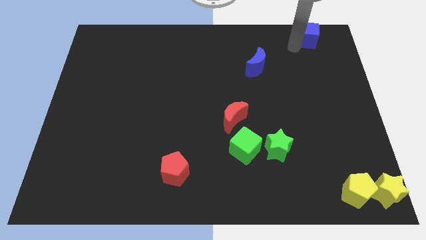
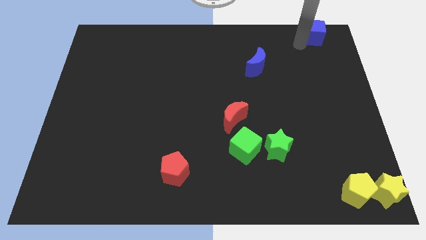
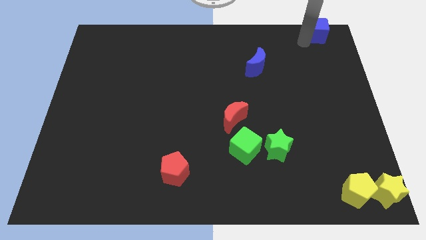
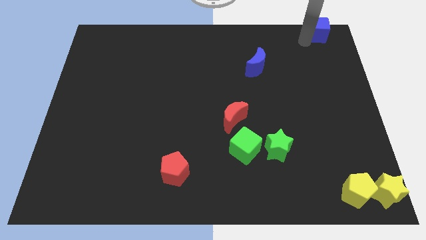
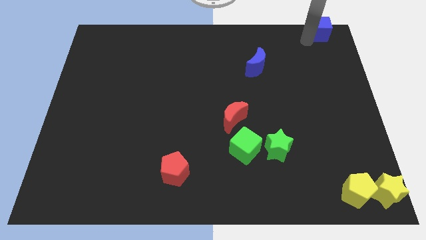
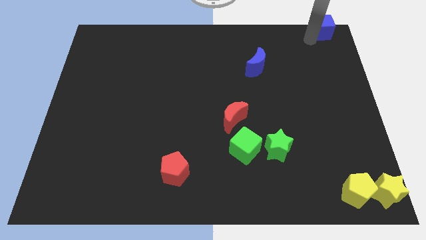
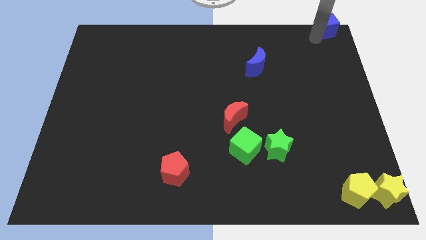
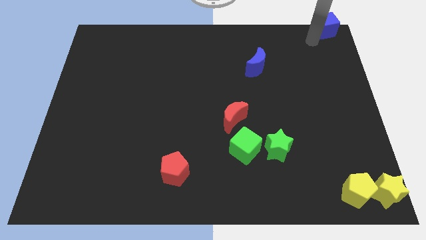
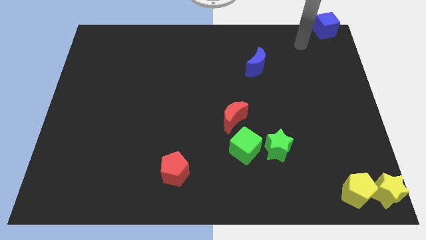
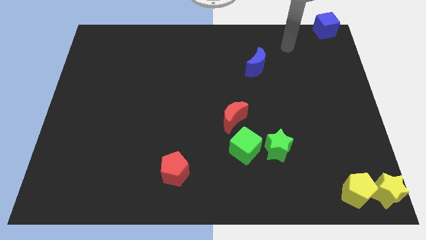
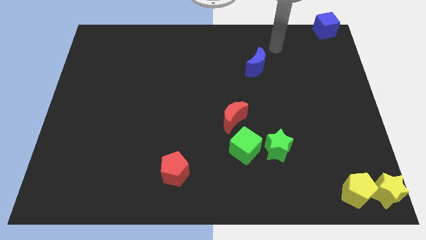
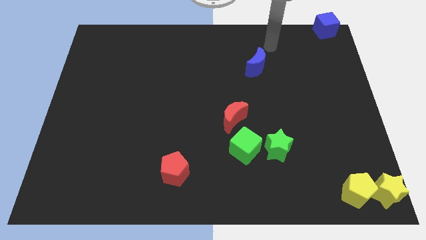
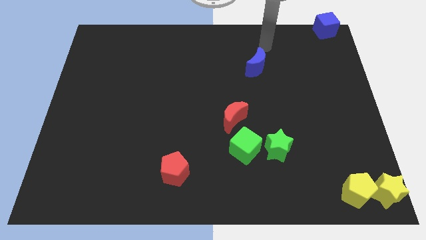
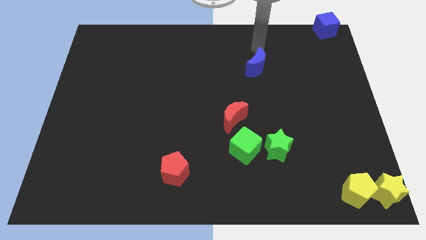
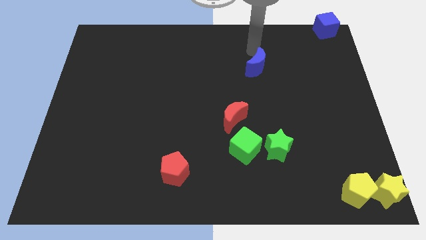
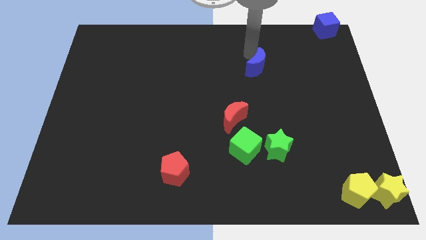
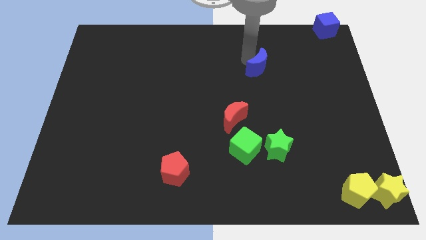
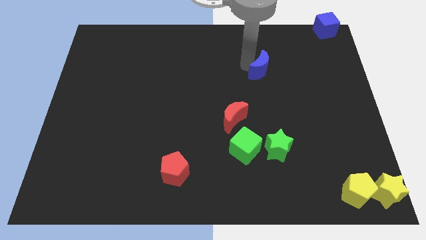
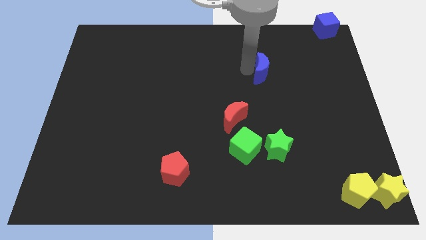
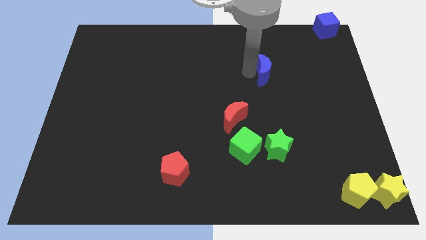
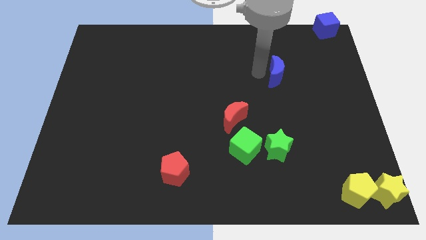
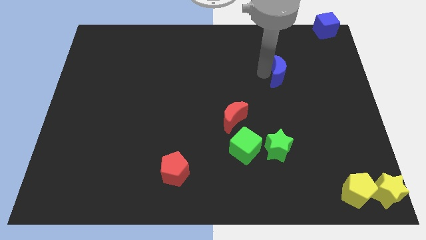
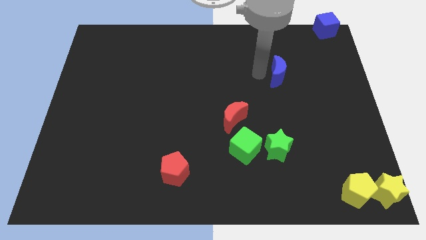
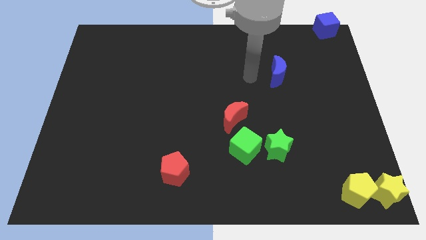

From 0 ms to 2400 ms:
move the arm from blue cube to the blue crescent

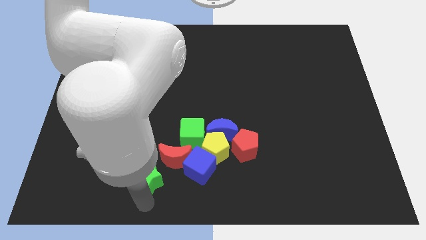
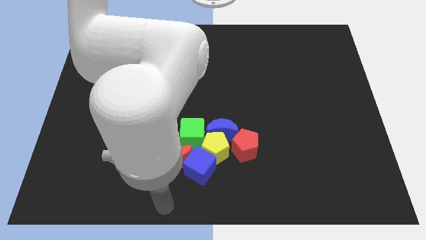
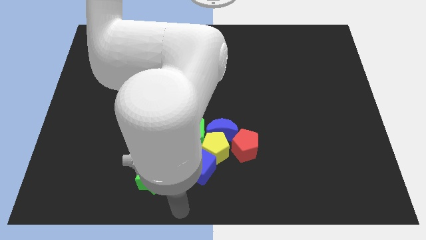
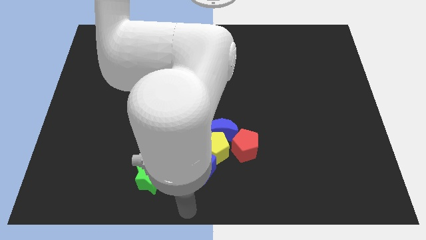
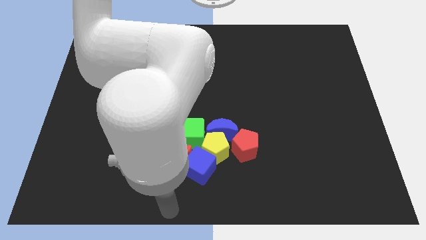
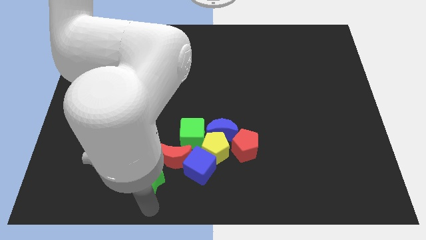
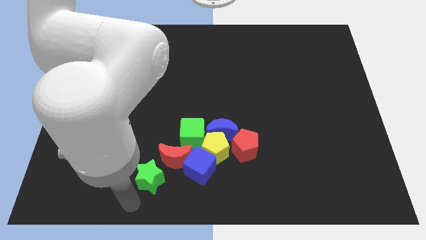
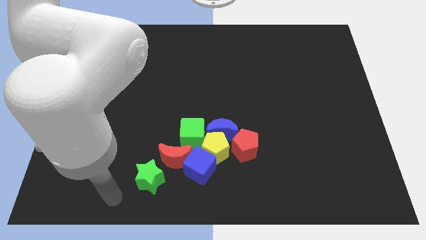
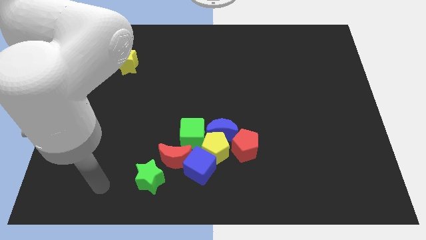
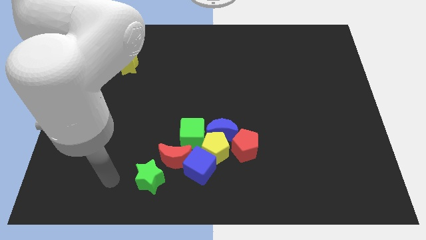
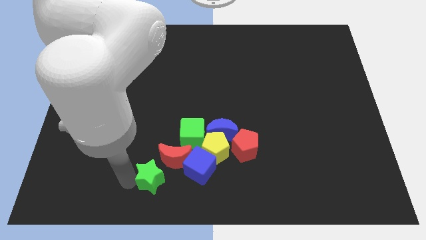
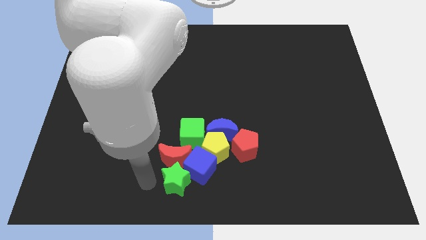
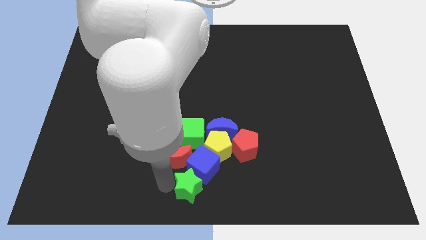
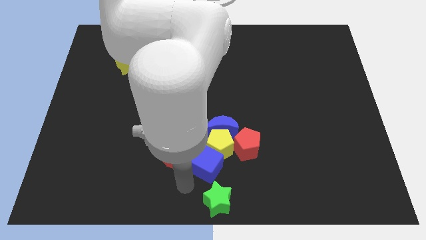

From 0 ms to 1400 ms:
move the green star to the bottom center corner of the board

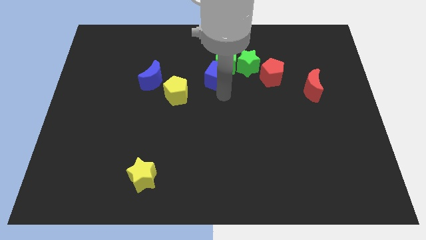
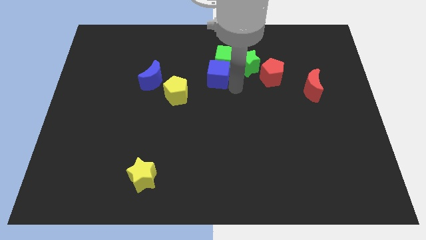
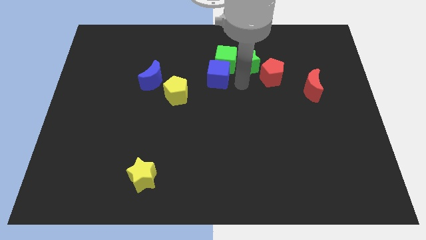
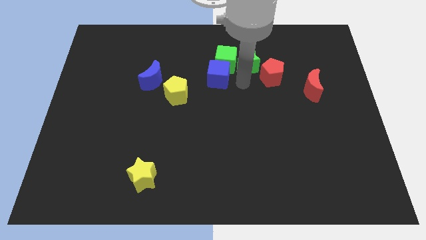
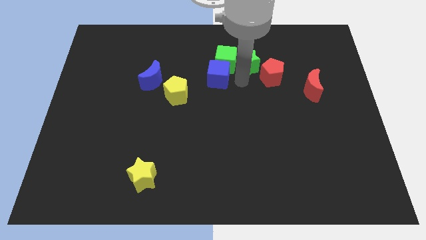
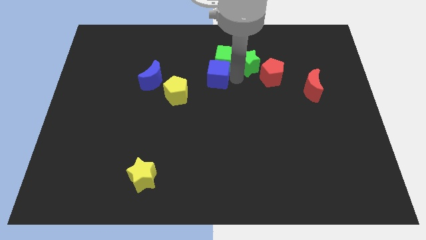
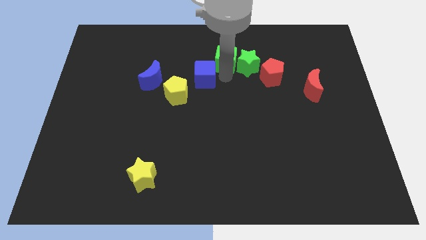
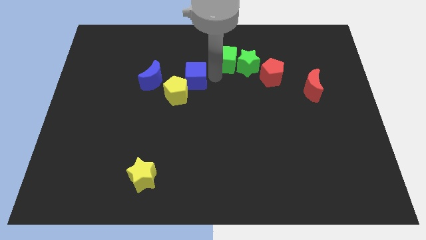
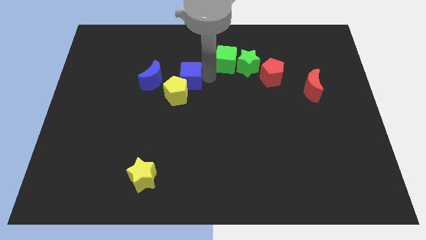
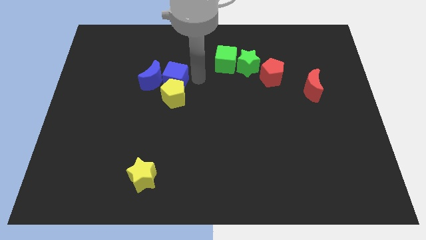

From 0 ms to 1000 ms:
place blue cube on the top of yellow pentagon

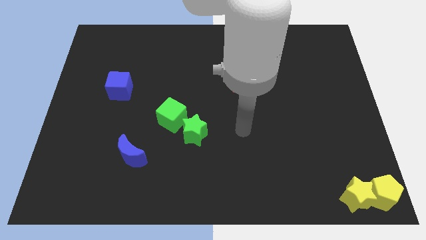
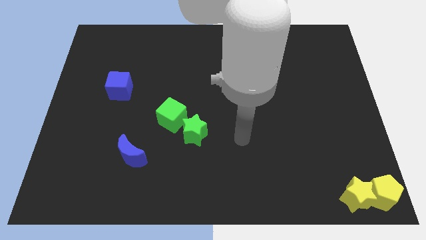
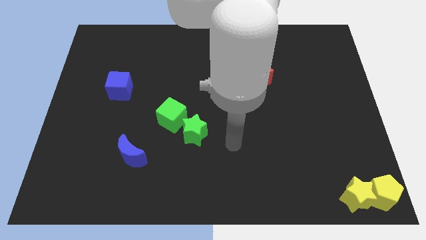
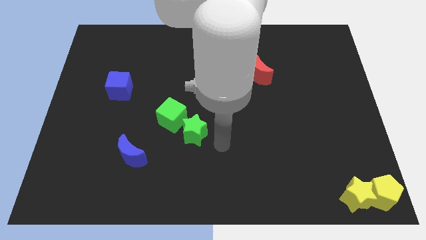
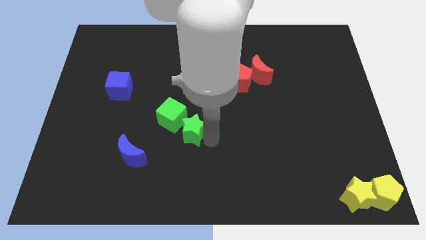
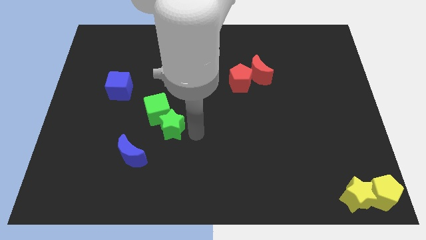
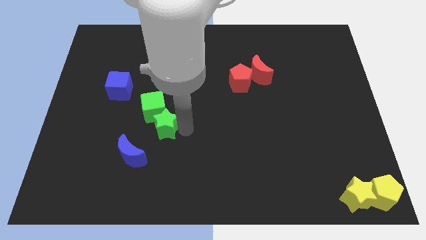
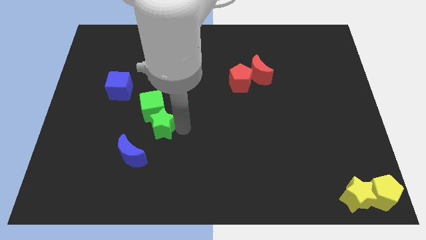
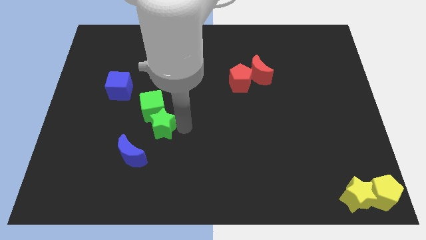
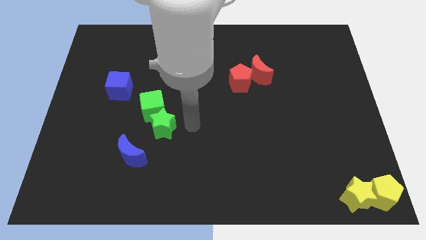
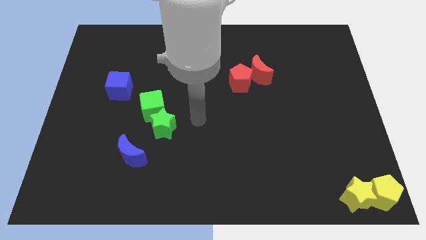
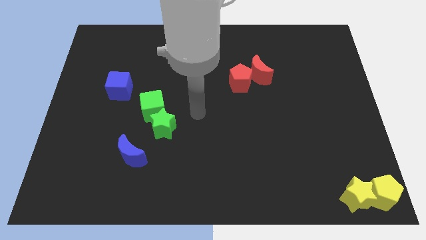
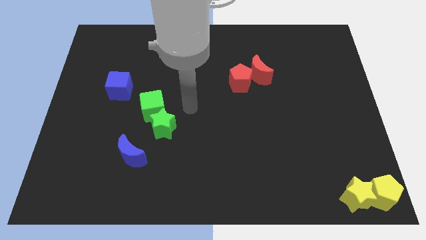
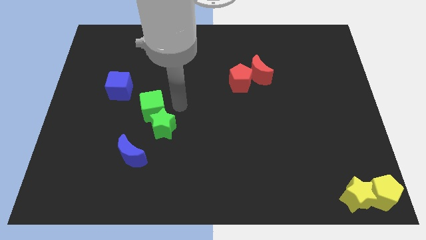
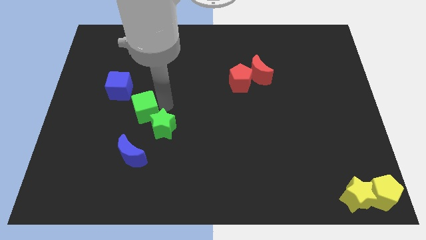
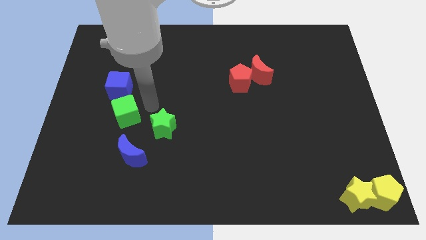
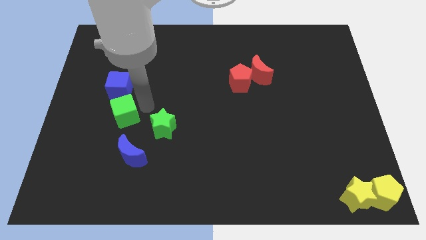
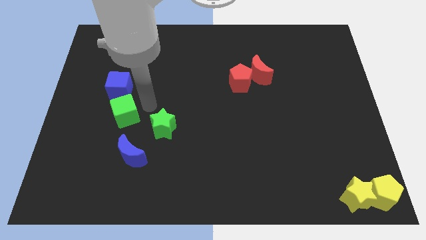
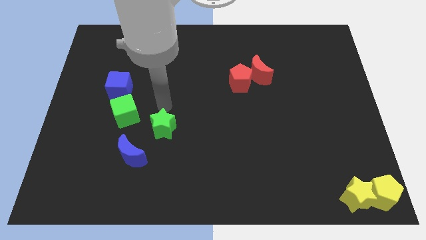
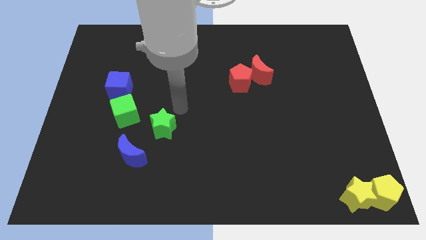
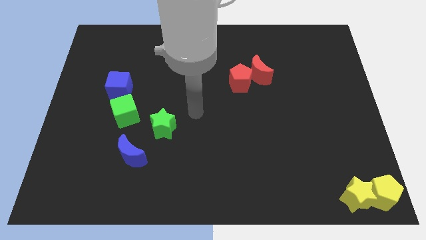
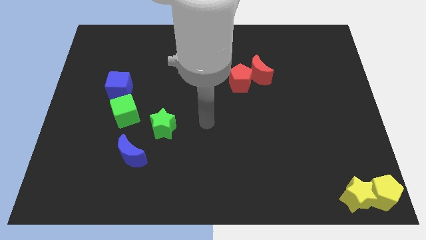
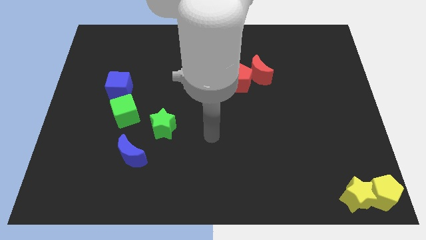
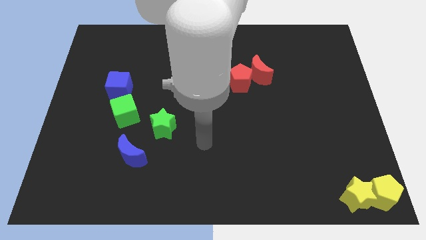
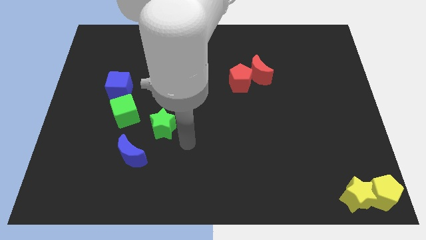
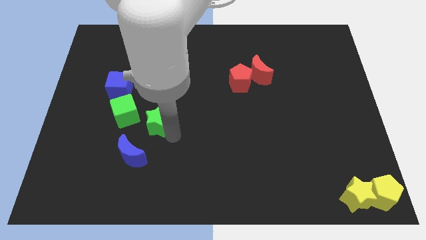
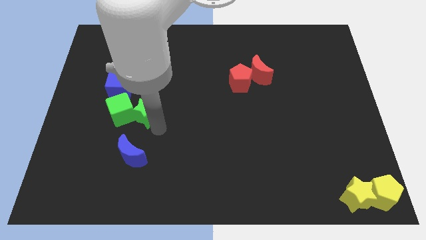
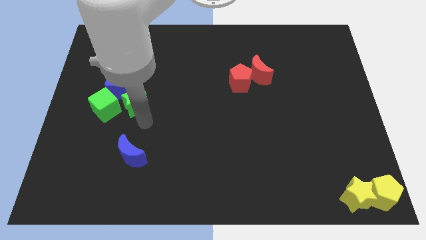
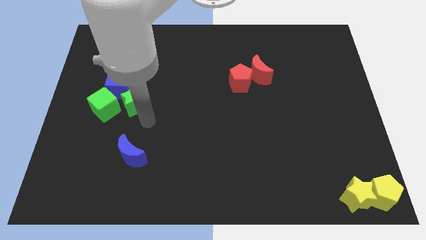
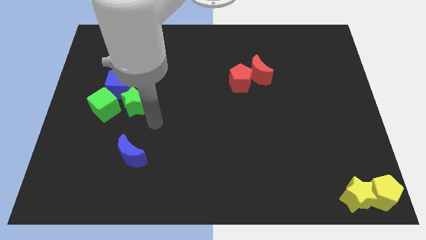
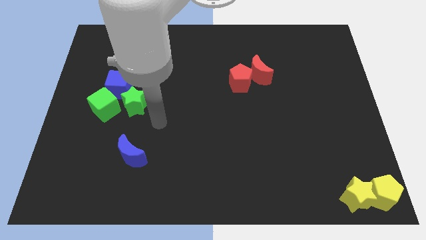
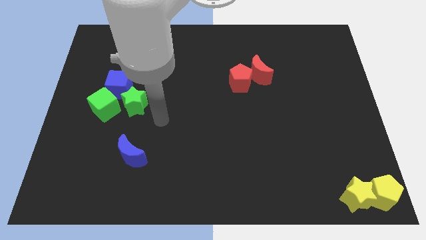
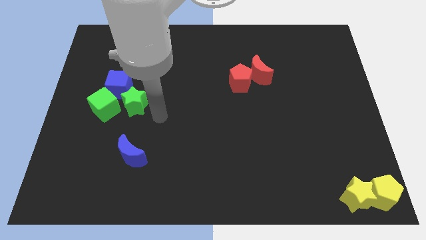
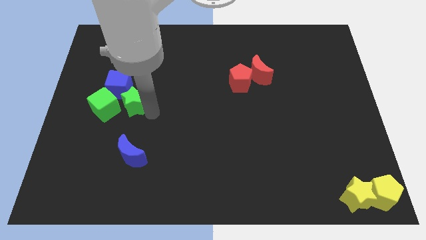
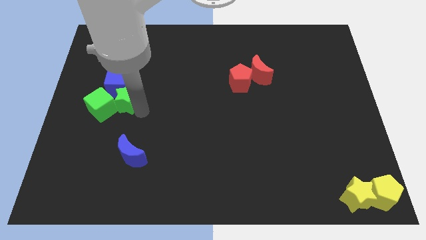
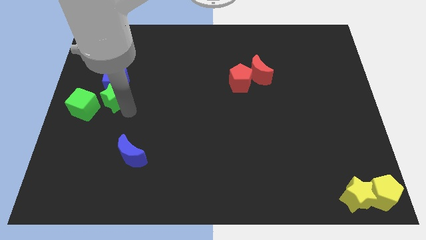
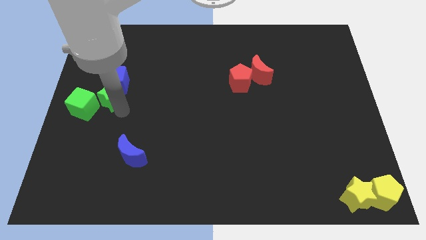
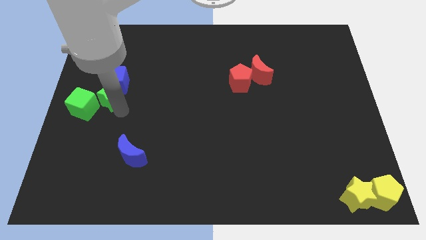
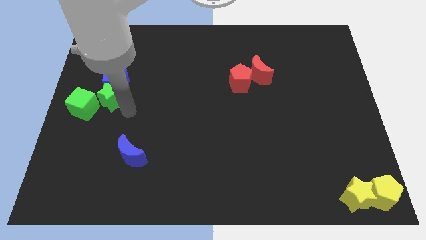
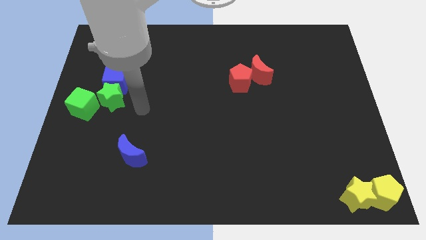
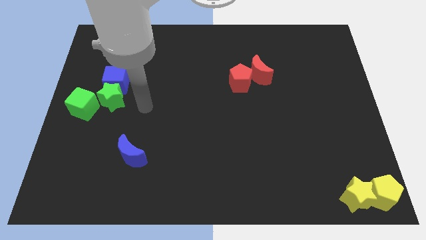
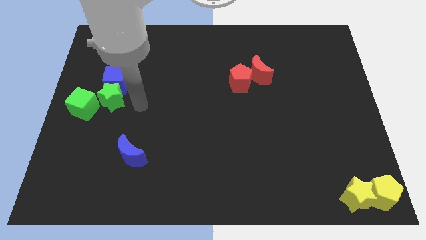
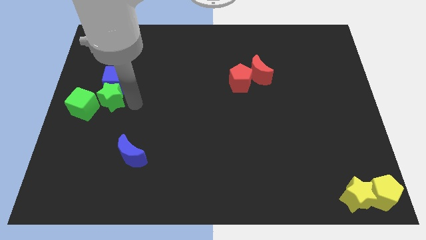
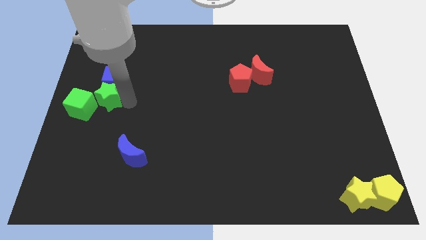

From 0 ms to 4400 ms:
move the green blocks towards left centre of the board

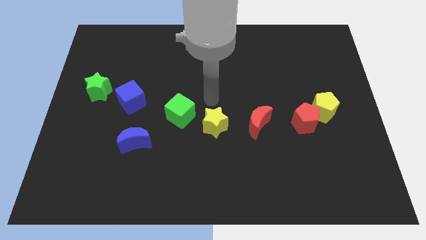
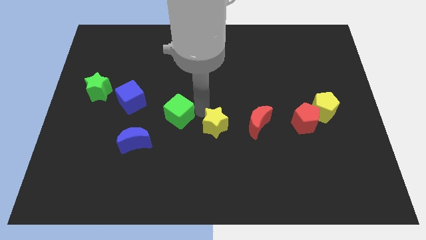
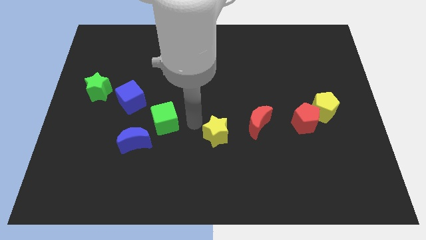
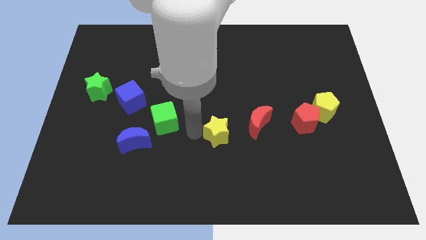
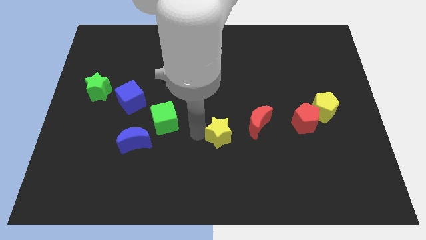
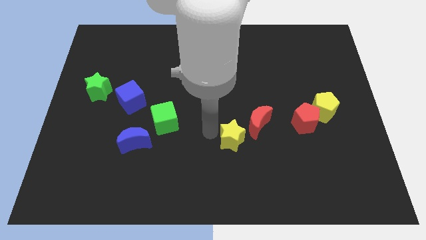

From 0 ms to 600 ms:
separate green cube and yellow star
